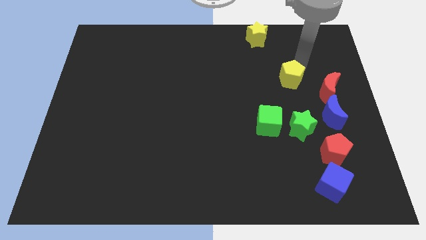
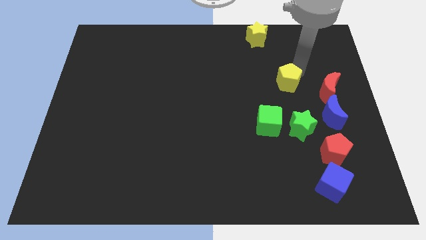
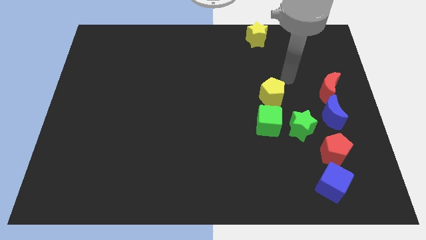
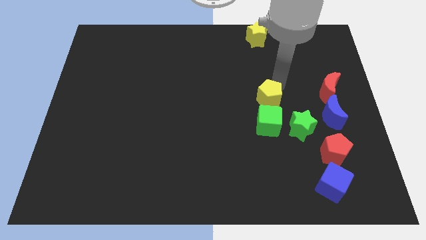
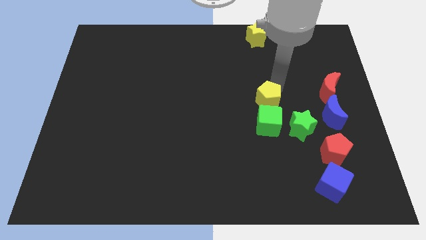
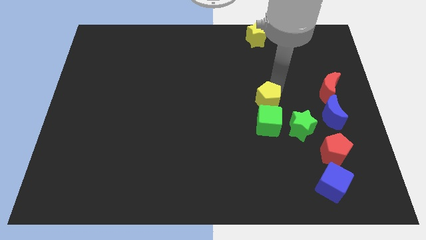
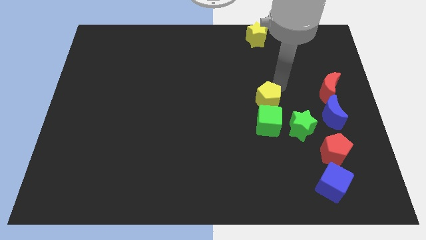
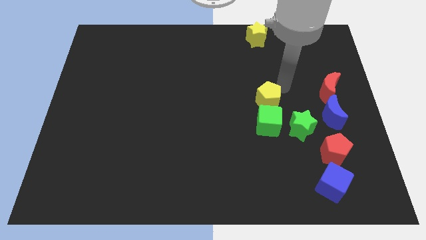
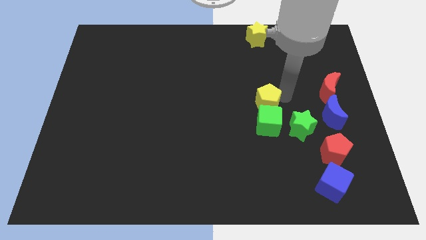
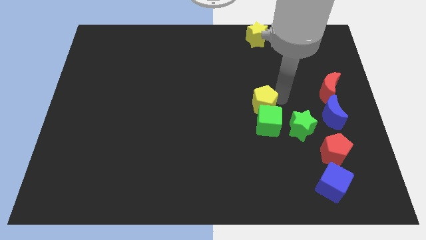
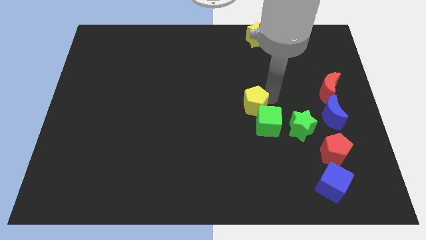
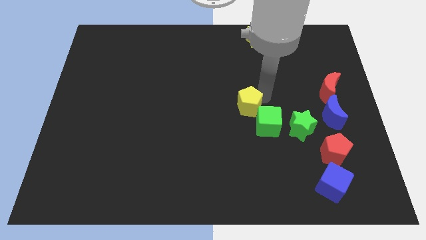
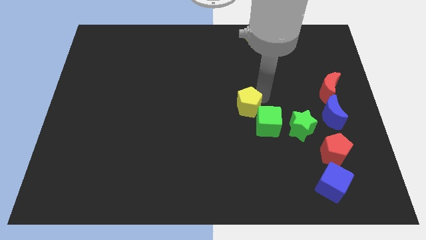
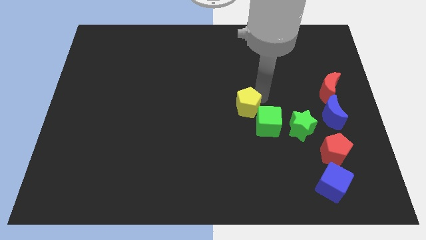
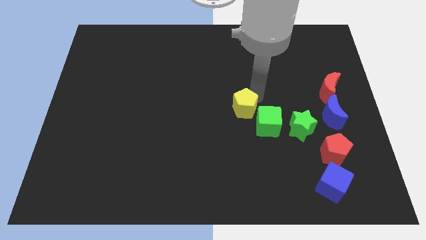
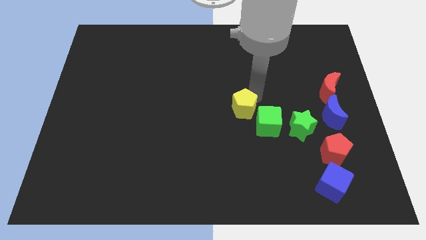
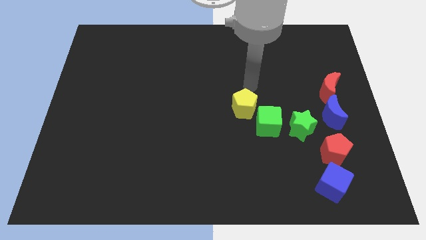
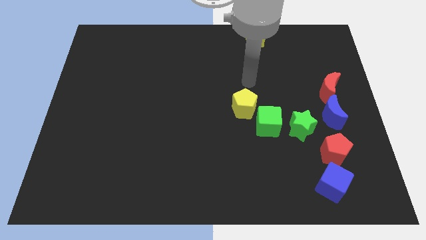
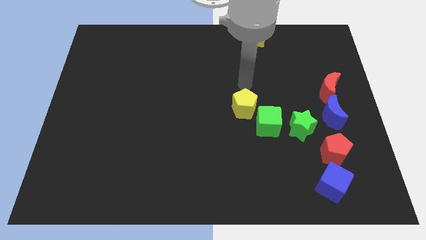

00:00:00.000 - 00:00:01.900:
place the yellow pentagon diagonally top left to the green cube

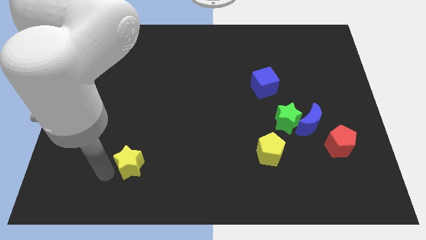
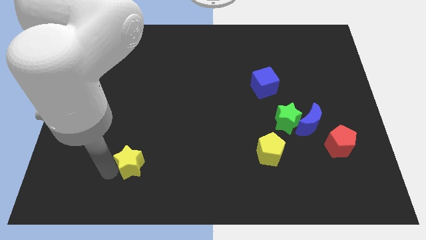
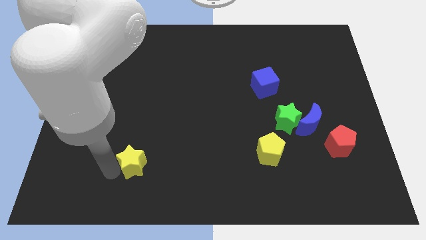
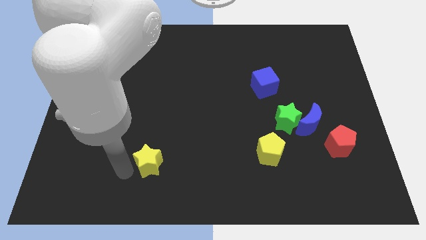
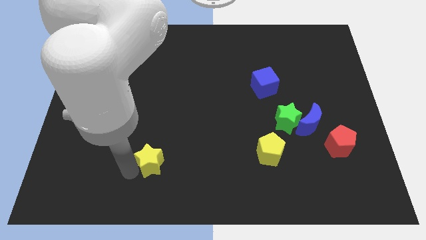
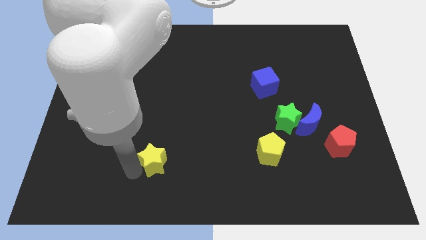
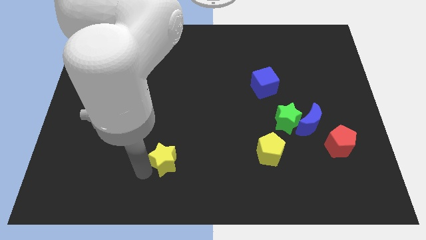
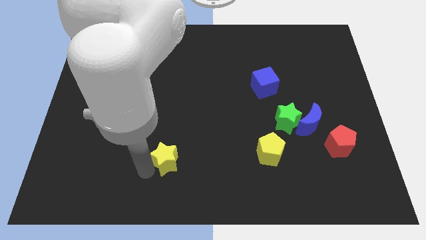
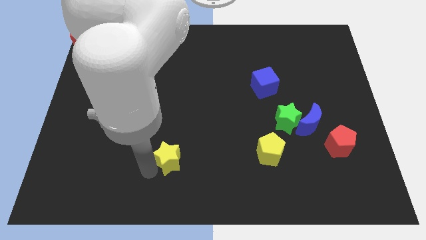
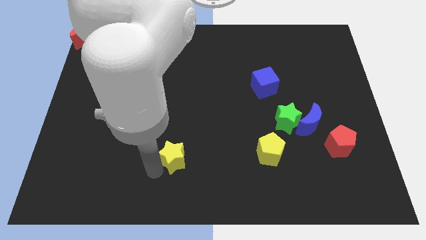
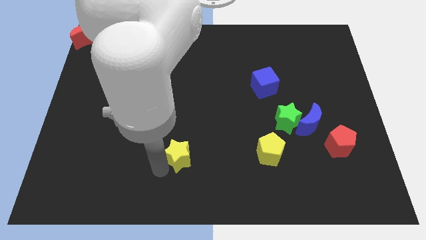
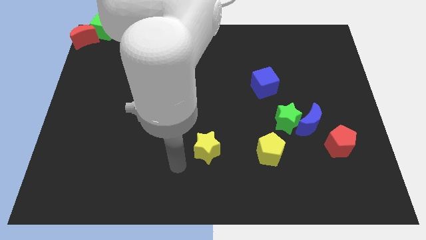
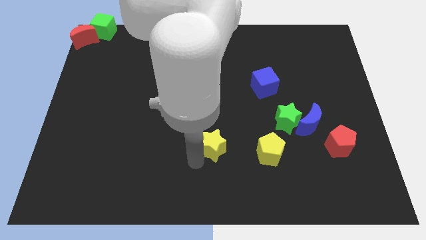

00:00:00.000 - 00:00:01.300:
move yellow star towards yellow pentagon

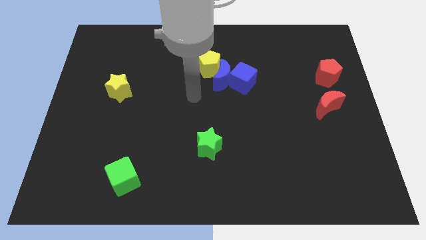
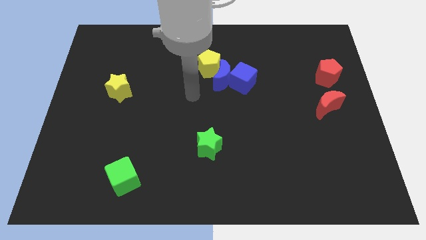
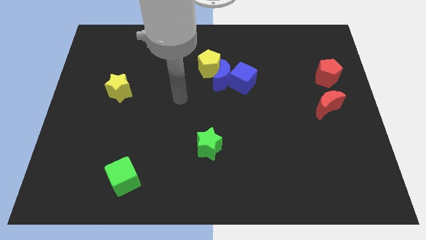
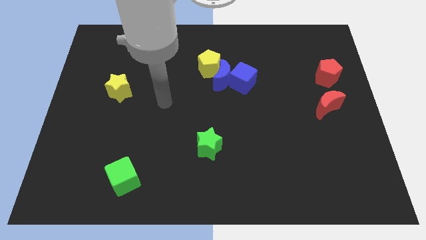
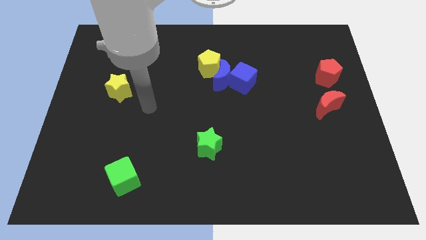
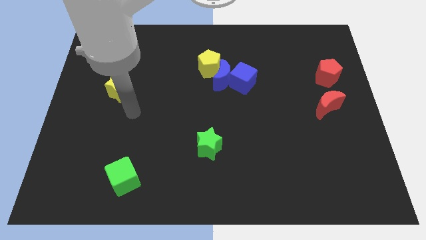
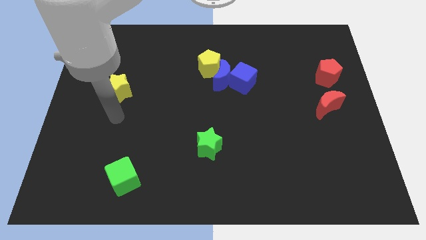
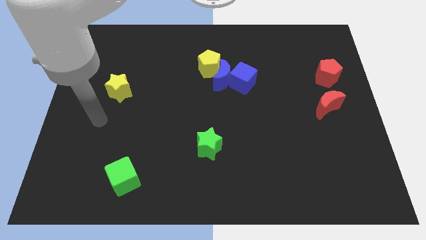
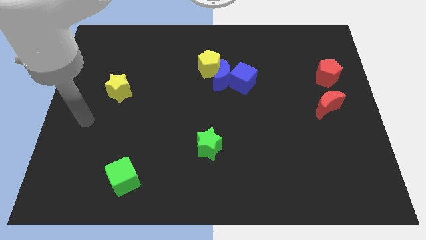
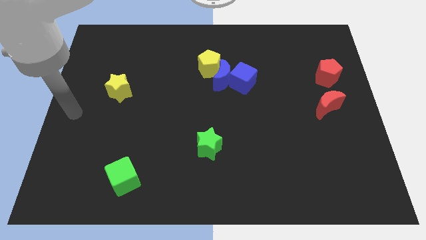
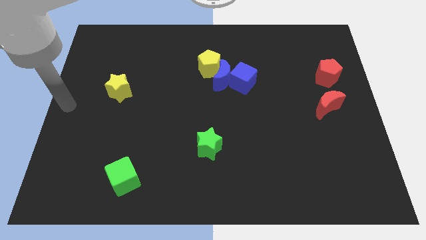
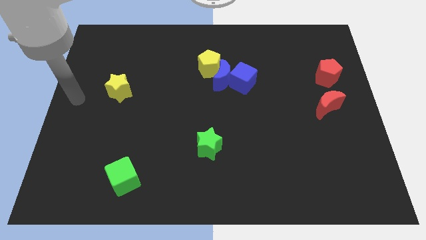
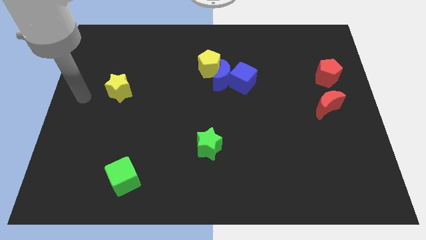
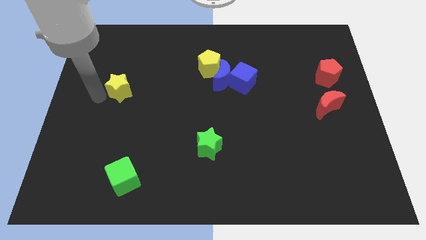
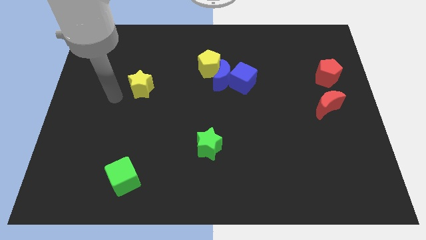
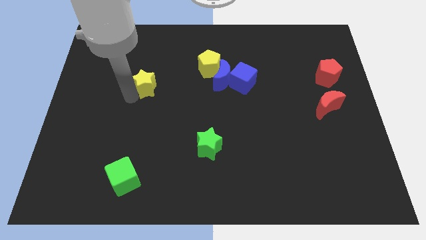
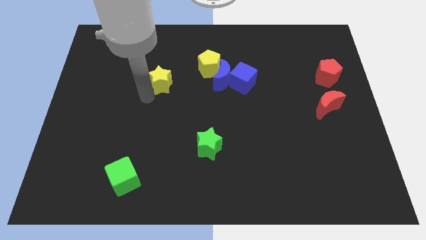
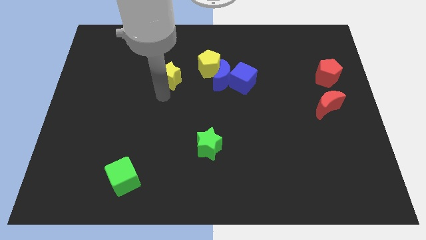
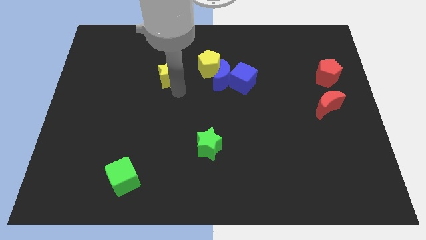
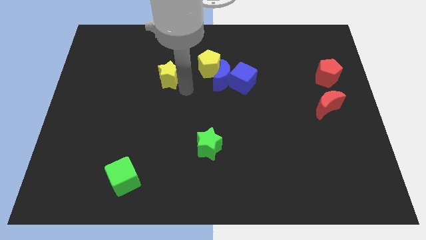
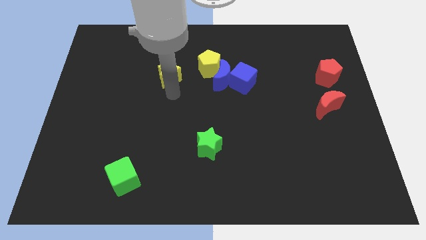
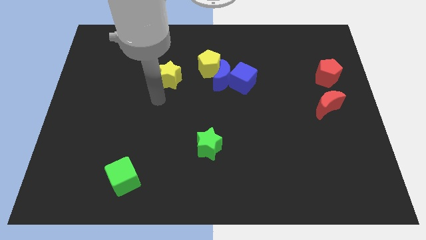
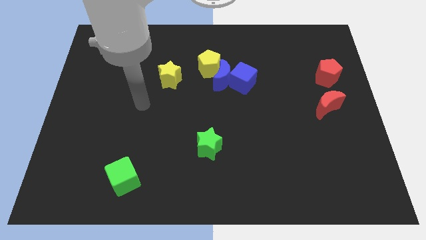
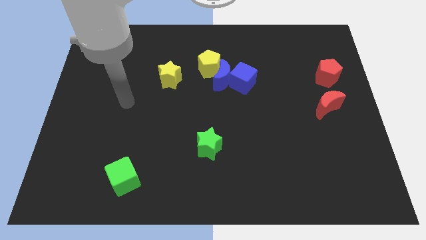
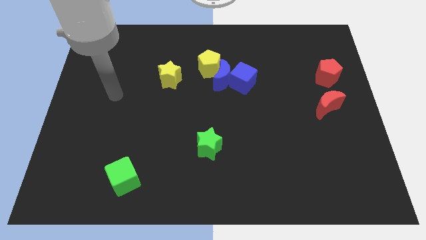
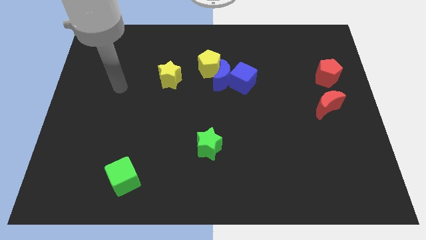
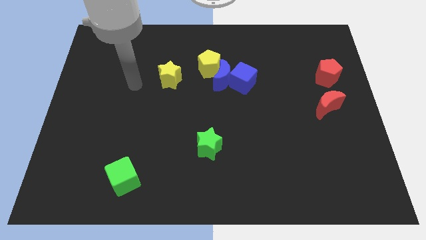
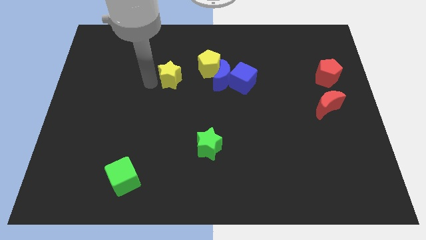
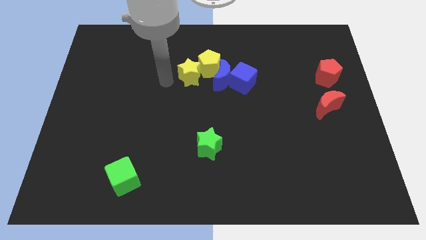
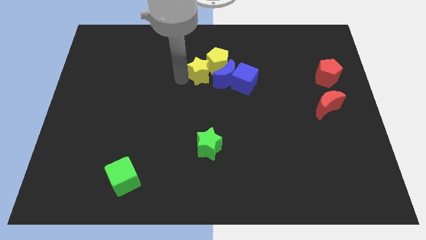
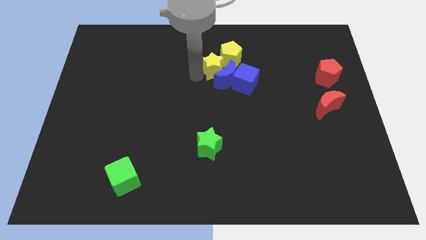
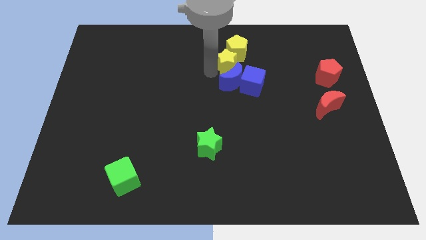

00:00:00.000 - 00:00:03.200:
push the yellow star into the yellow pentagon

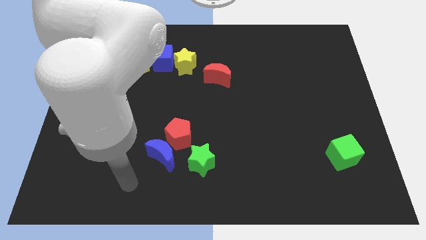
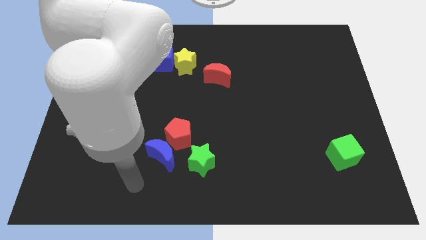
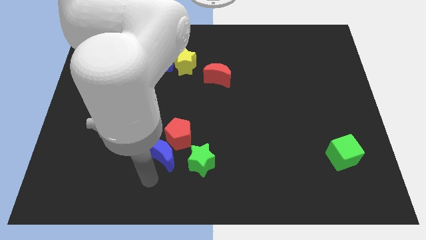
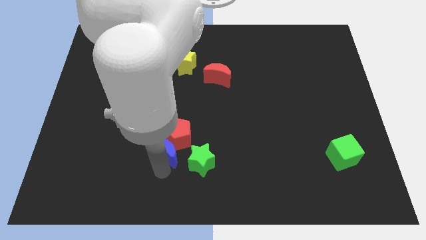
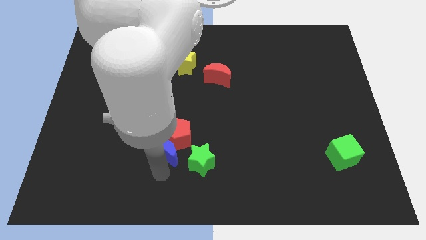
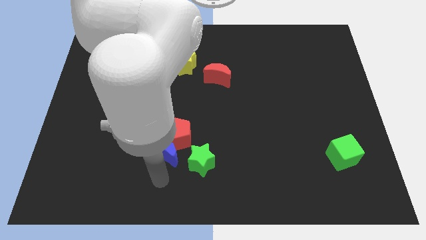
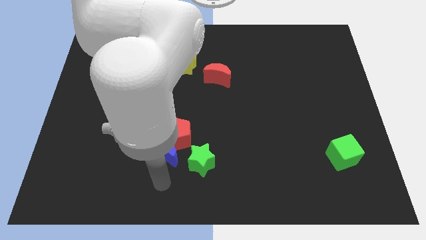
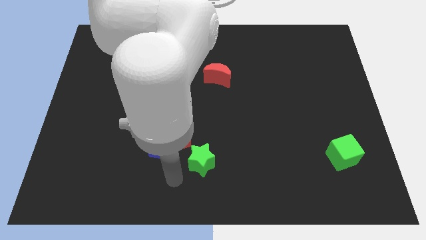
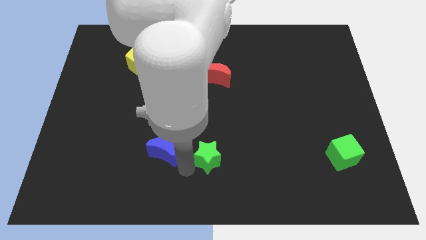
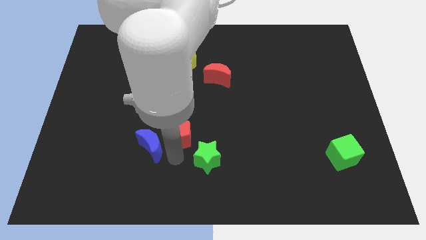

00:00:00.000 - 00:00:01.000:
point your arm below red pentagon

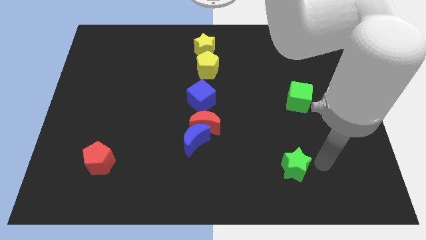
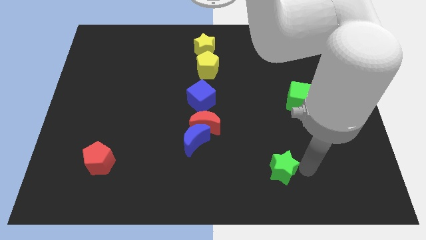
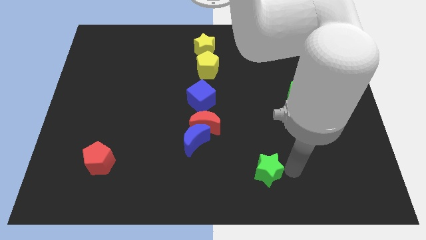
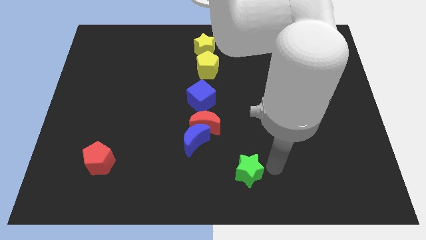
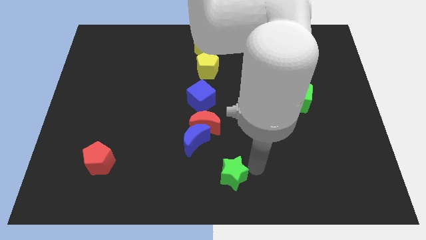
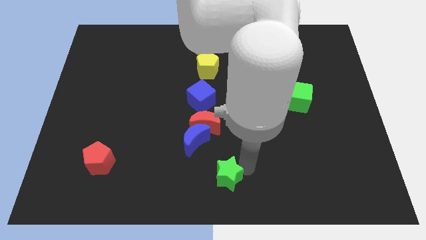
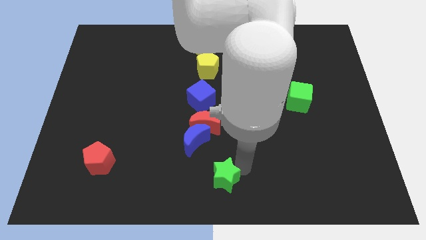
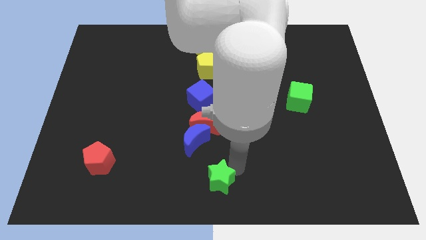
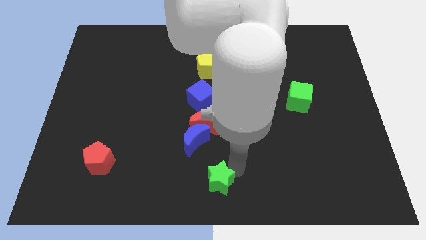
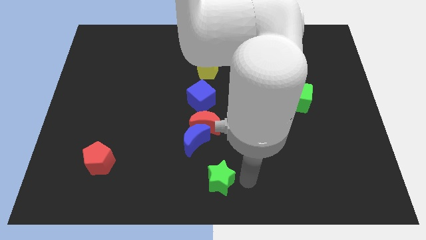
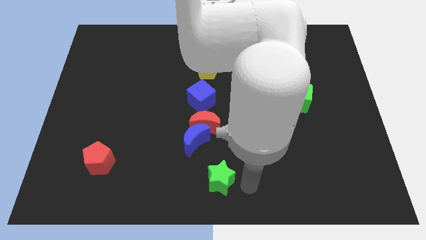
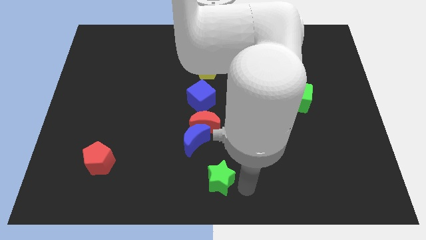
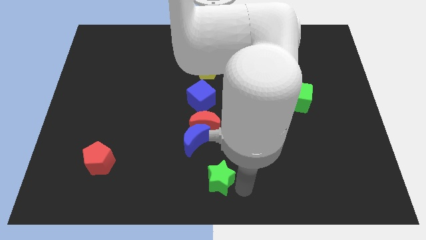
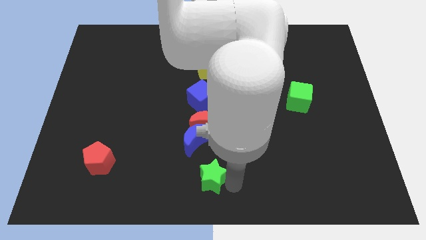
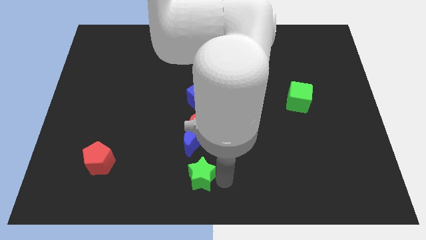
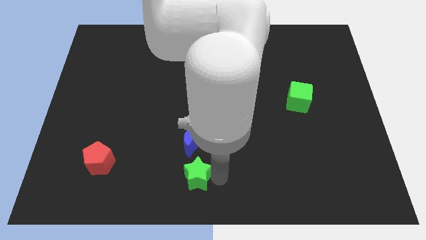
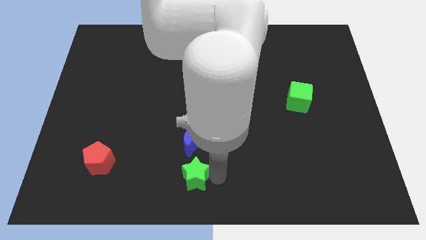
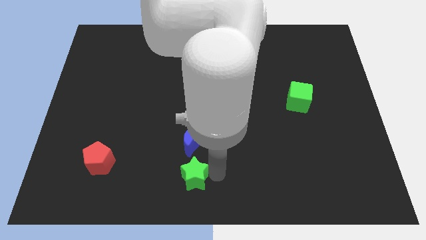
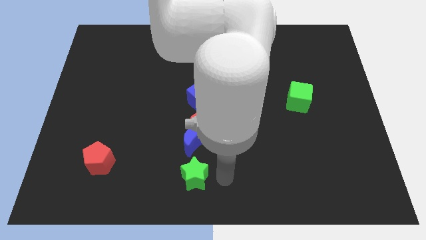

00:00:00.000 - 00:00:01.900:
push the green star below the blue crescent
